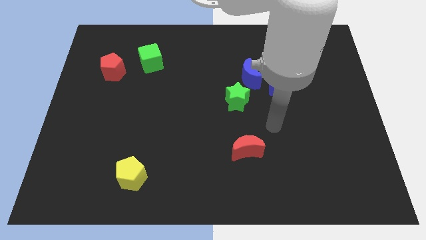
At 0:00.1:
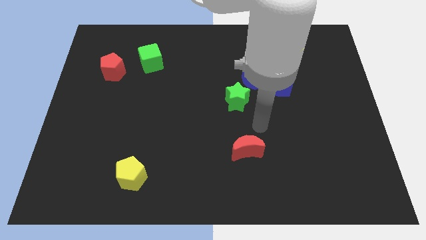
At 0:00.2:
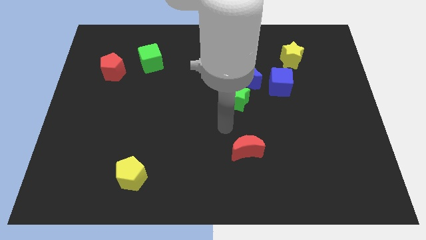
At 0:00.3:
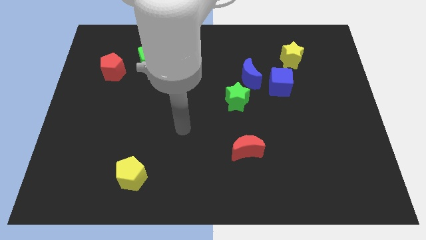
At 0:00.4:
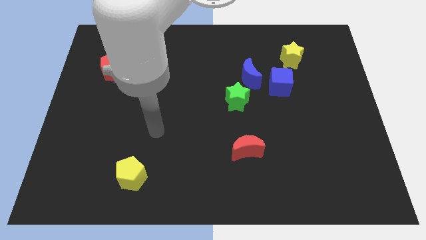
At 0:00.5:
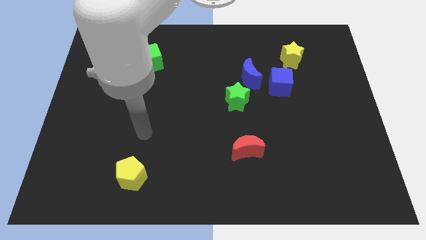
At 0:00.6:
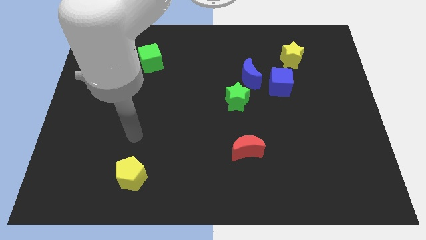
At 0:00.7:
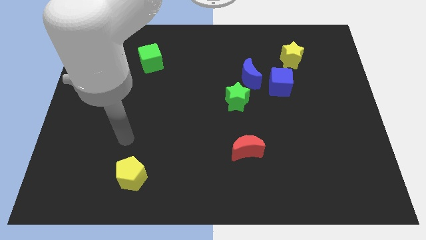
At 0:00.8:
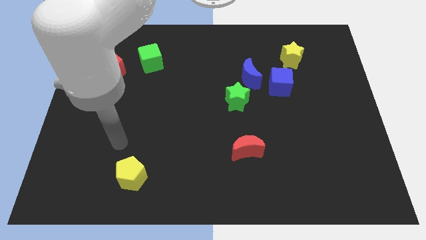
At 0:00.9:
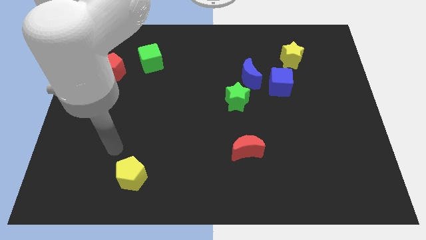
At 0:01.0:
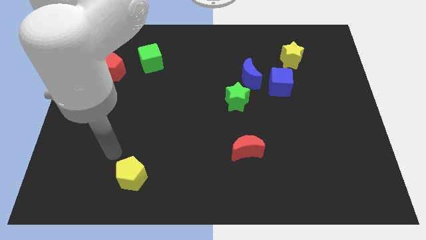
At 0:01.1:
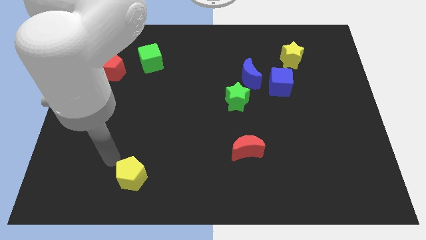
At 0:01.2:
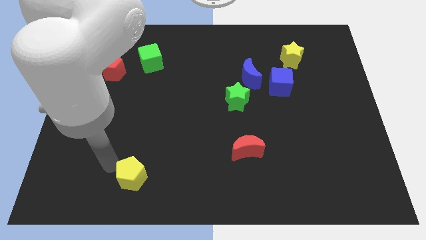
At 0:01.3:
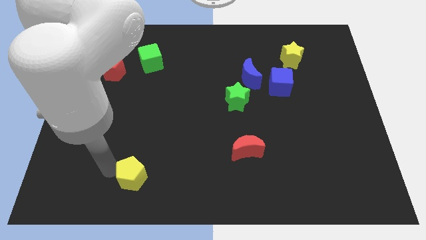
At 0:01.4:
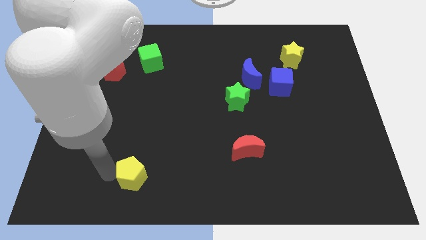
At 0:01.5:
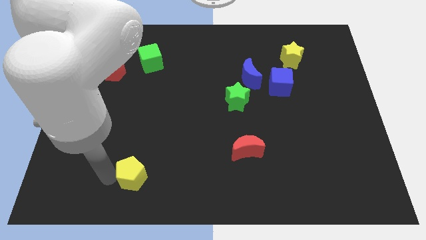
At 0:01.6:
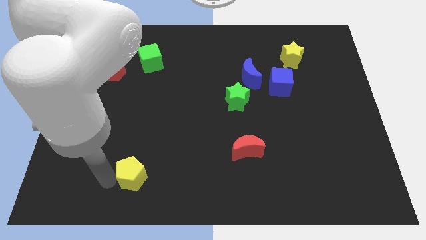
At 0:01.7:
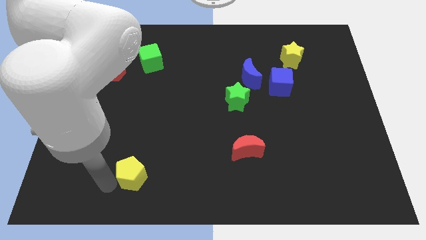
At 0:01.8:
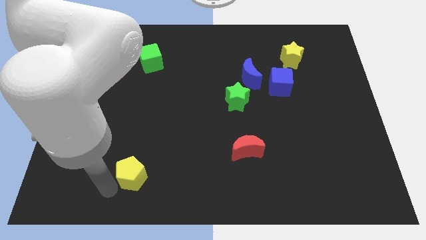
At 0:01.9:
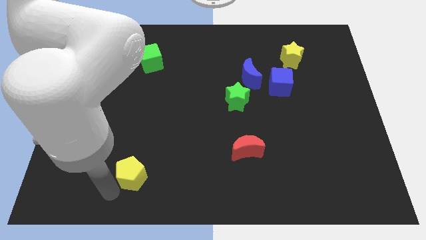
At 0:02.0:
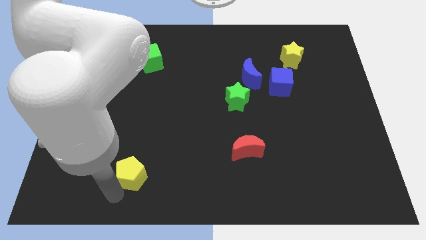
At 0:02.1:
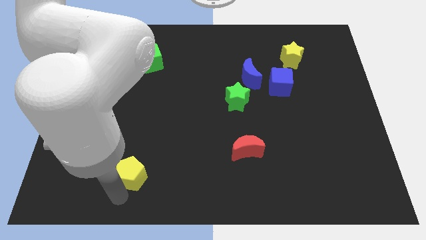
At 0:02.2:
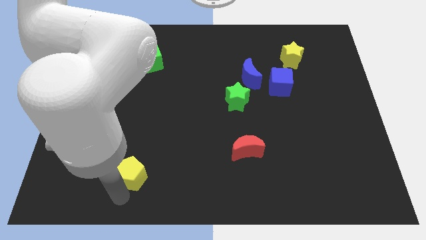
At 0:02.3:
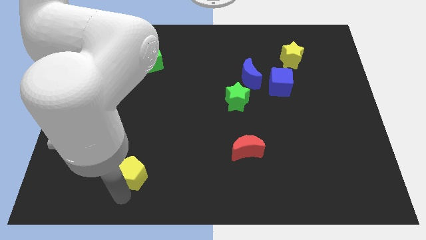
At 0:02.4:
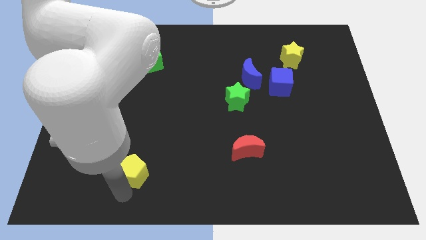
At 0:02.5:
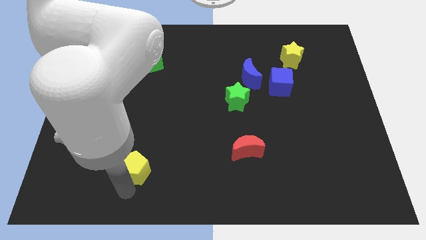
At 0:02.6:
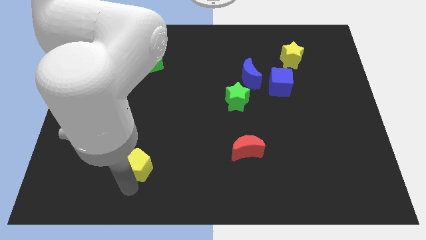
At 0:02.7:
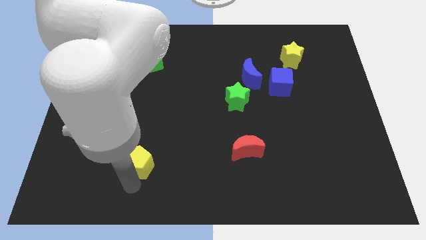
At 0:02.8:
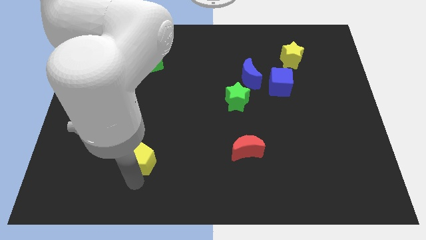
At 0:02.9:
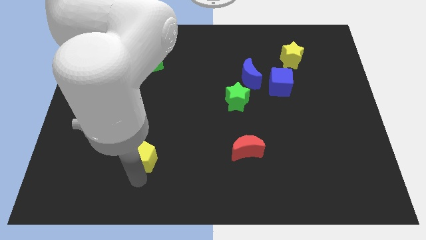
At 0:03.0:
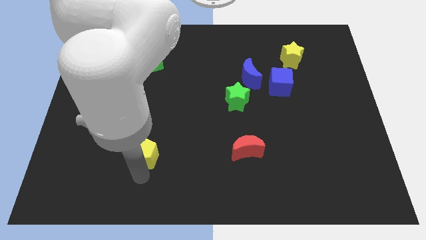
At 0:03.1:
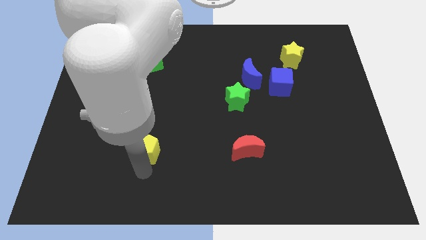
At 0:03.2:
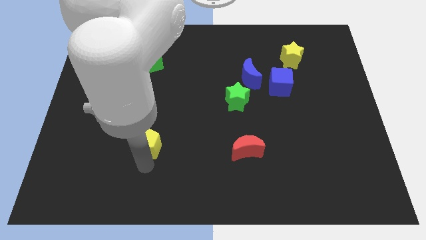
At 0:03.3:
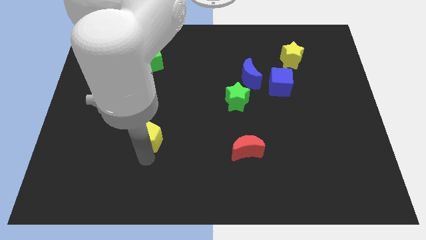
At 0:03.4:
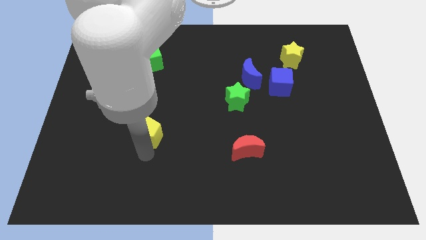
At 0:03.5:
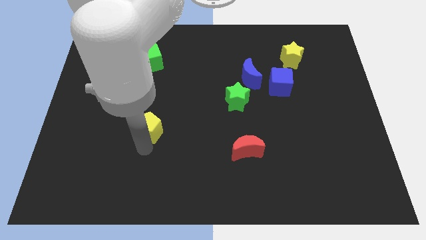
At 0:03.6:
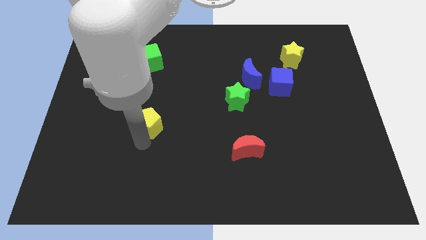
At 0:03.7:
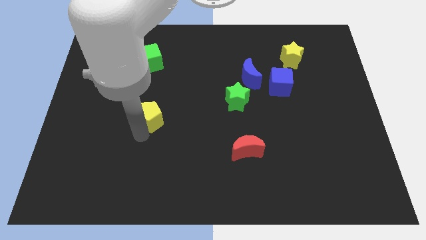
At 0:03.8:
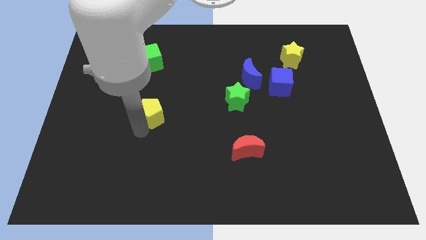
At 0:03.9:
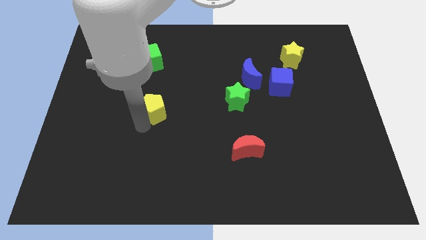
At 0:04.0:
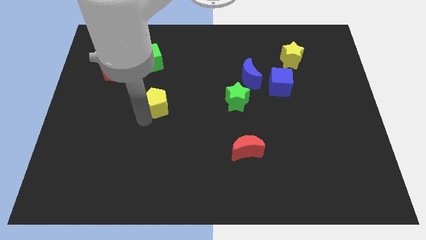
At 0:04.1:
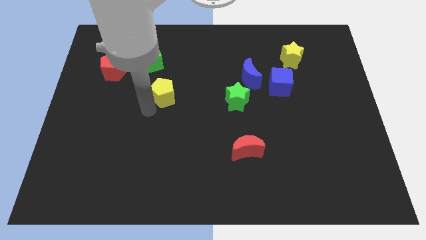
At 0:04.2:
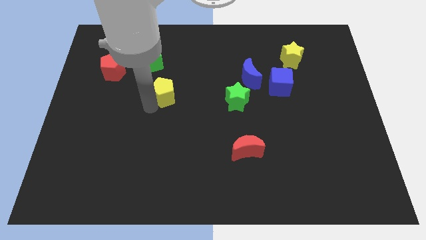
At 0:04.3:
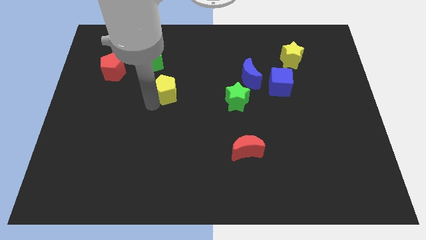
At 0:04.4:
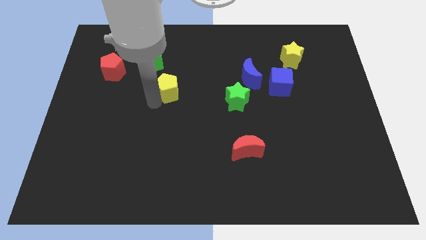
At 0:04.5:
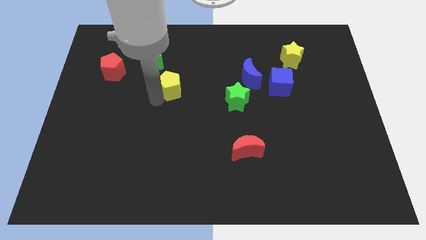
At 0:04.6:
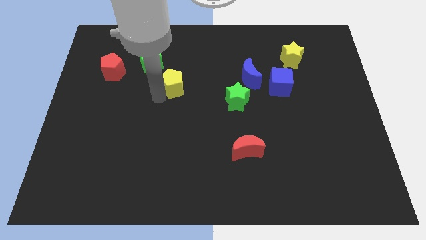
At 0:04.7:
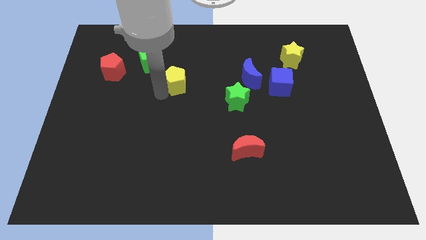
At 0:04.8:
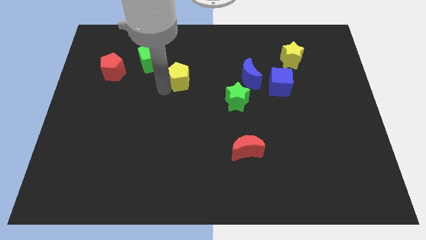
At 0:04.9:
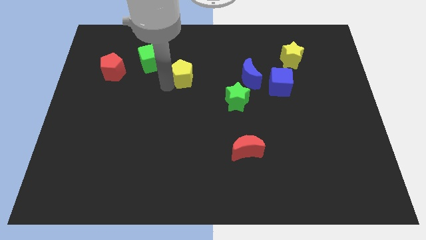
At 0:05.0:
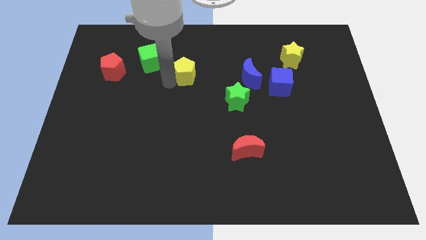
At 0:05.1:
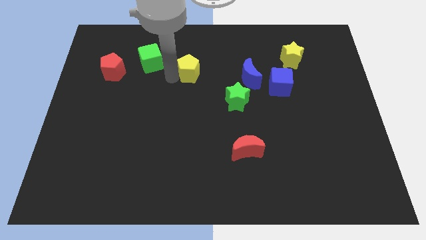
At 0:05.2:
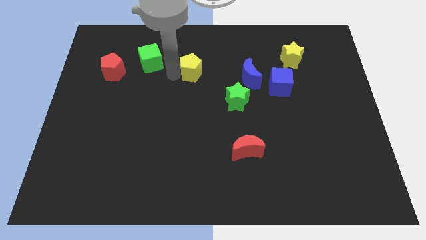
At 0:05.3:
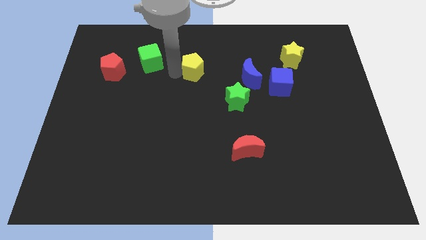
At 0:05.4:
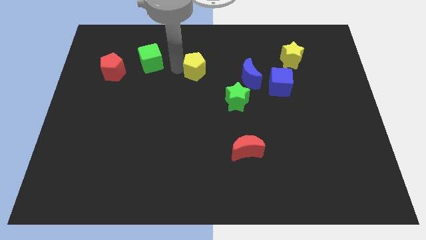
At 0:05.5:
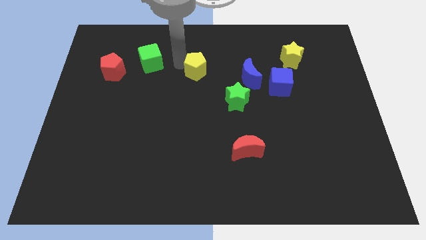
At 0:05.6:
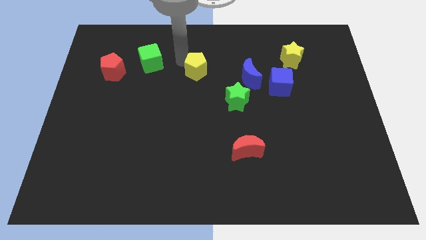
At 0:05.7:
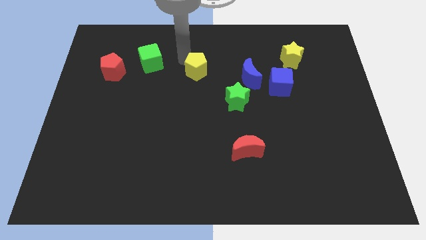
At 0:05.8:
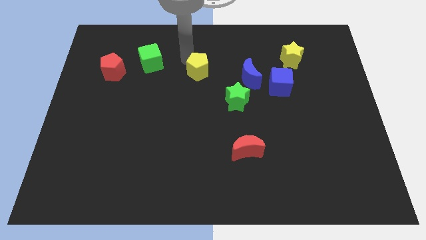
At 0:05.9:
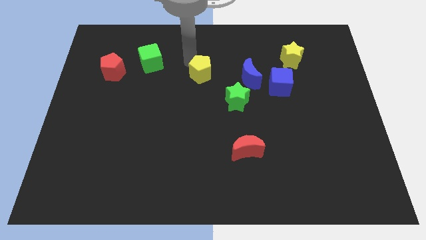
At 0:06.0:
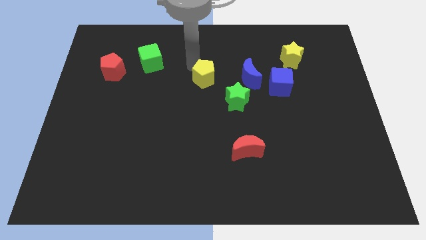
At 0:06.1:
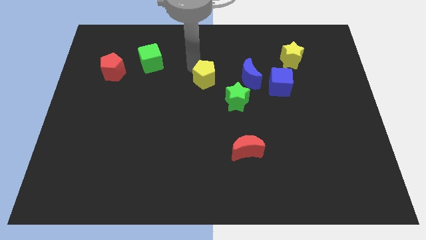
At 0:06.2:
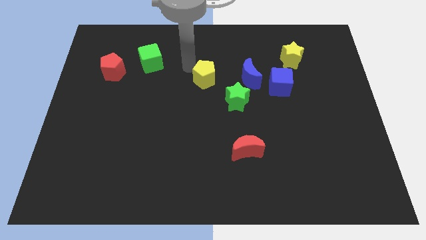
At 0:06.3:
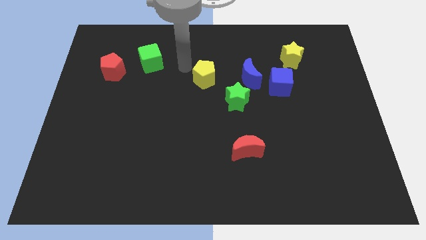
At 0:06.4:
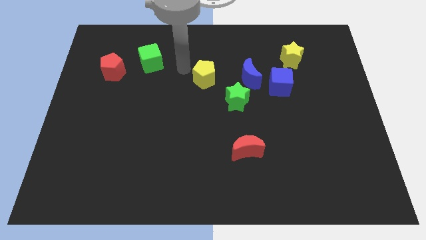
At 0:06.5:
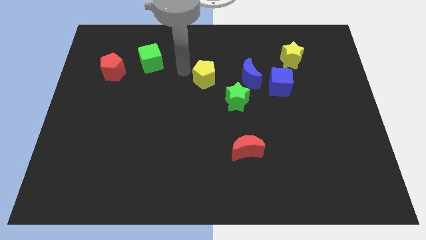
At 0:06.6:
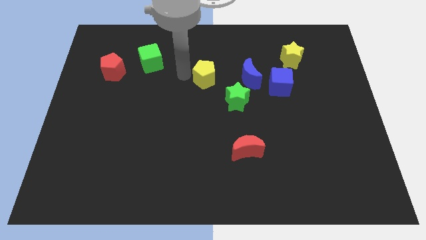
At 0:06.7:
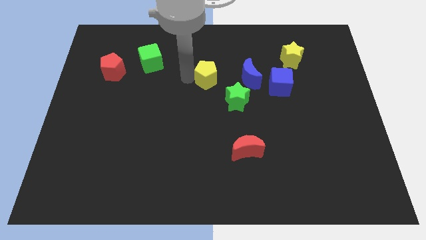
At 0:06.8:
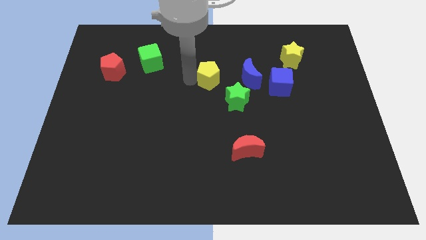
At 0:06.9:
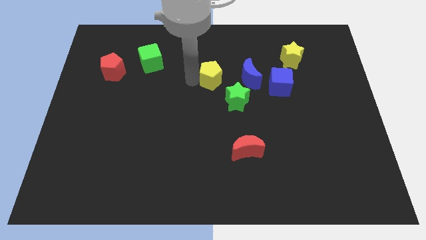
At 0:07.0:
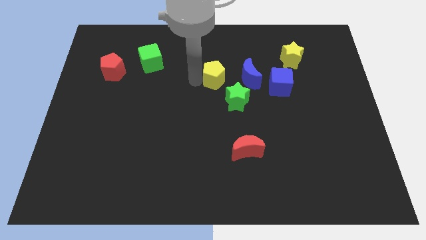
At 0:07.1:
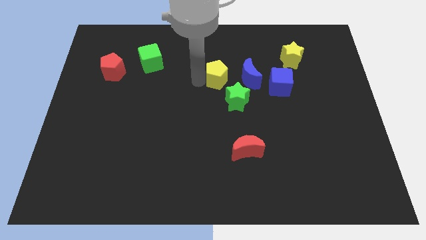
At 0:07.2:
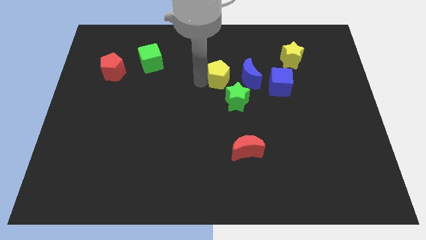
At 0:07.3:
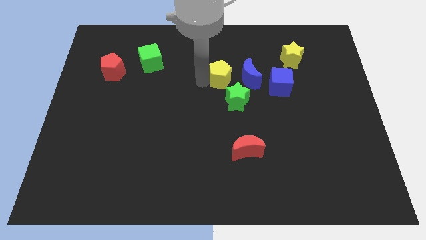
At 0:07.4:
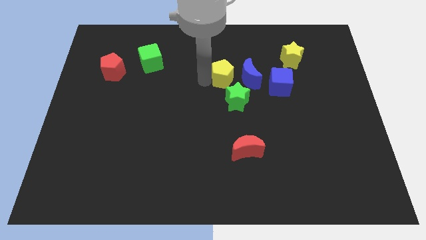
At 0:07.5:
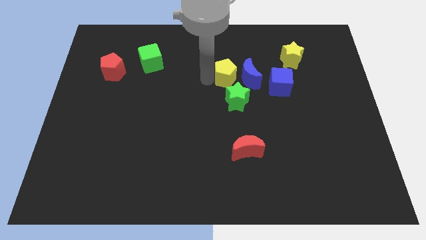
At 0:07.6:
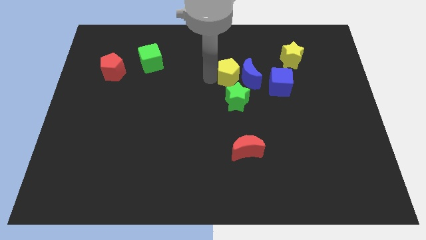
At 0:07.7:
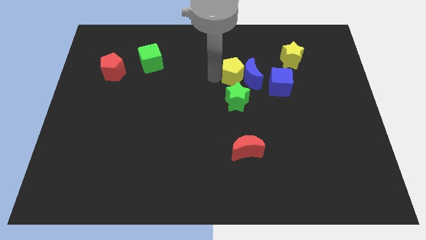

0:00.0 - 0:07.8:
move the yellow pentagon close to the blue moon

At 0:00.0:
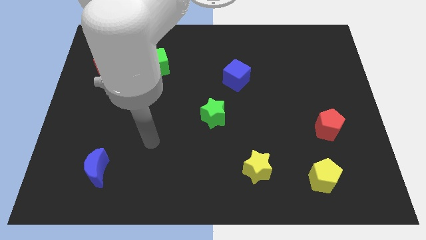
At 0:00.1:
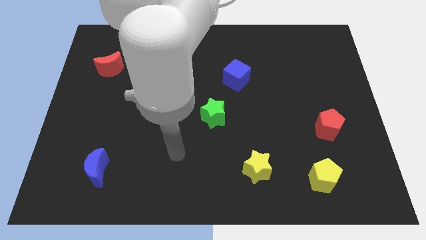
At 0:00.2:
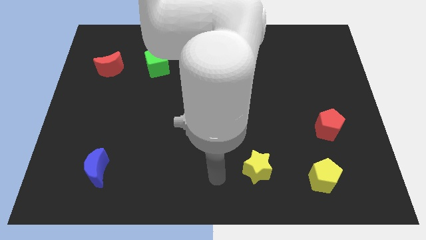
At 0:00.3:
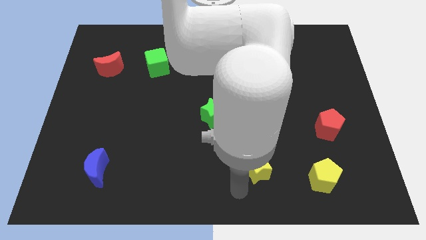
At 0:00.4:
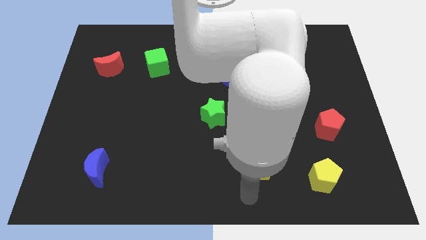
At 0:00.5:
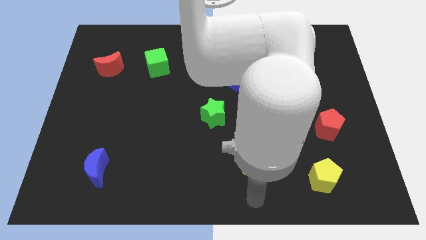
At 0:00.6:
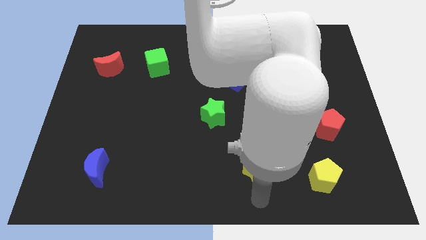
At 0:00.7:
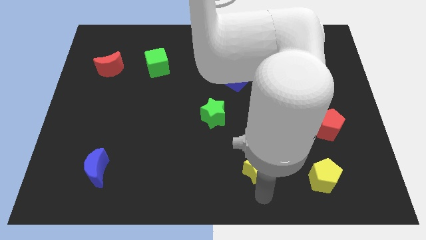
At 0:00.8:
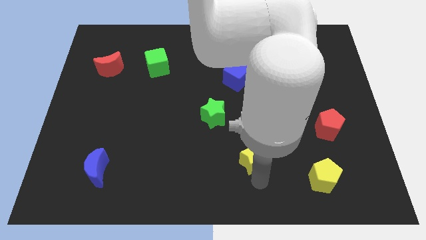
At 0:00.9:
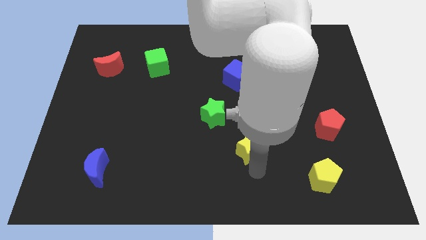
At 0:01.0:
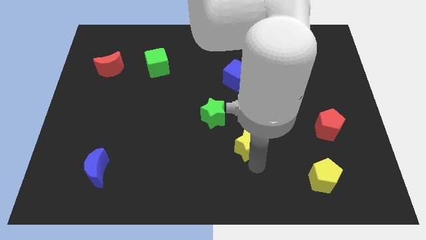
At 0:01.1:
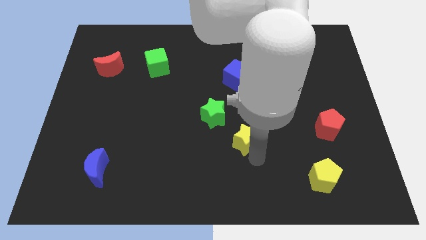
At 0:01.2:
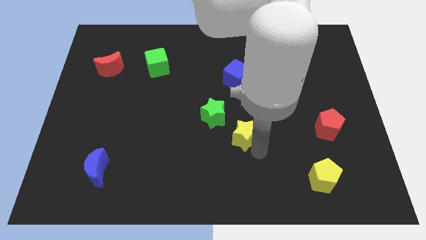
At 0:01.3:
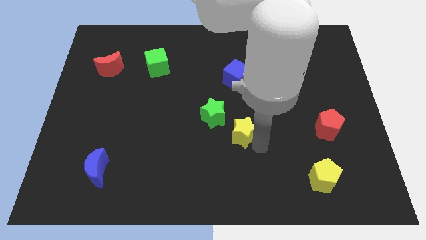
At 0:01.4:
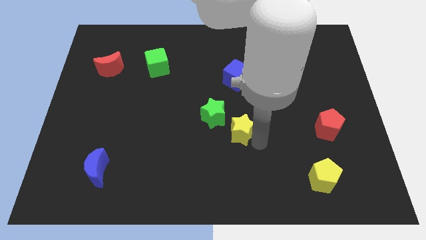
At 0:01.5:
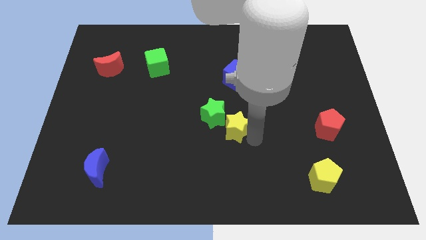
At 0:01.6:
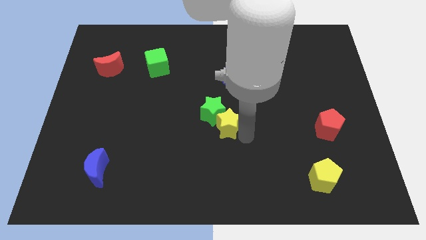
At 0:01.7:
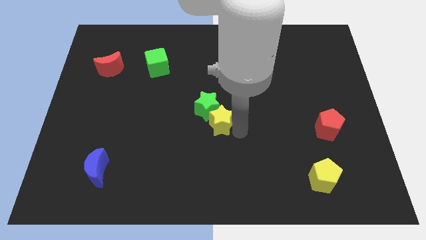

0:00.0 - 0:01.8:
put the yellow star towards the green star
